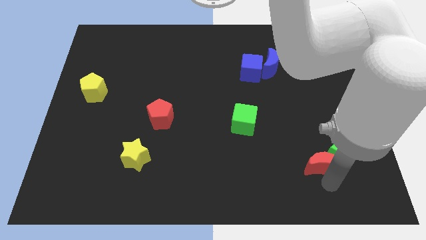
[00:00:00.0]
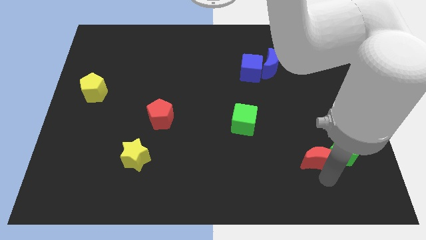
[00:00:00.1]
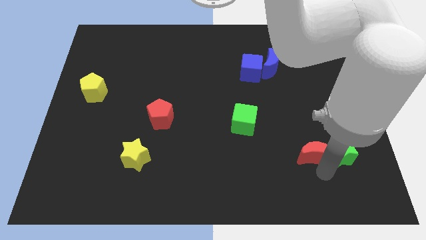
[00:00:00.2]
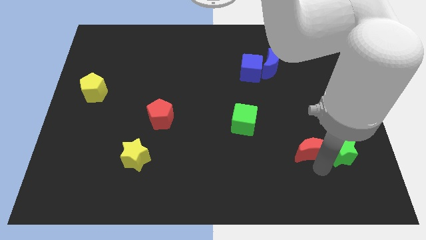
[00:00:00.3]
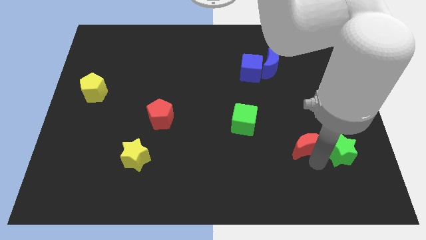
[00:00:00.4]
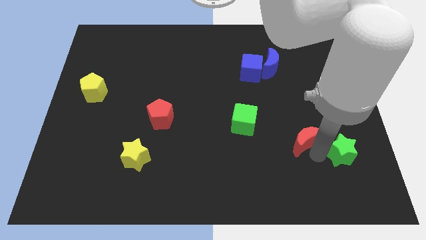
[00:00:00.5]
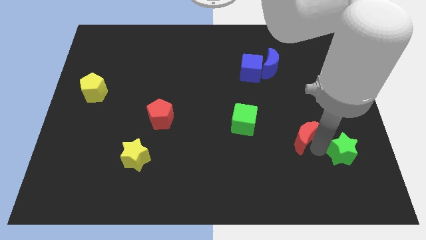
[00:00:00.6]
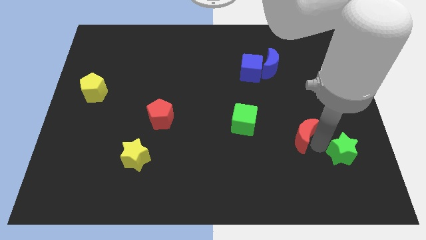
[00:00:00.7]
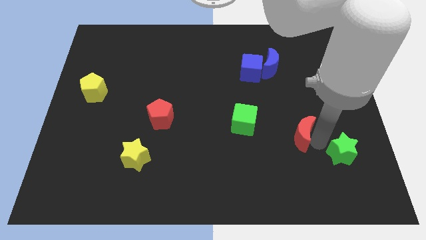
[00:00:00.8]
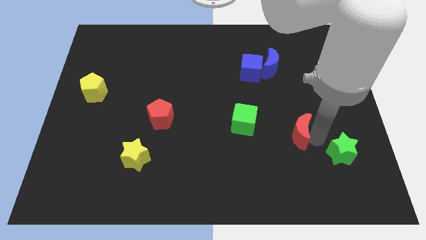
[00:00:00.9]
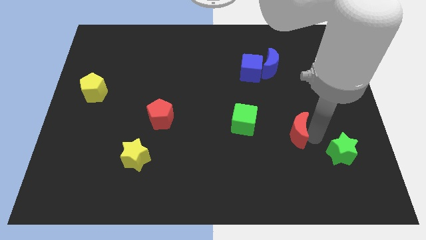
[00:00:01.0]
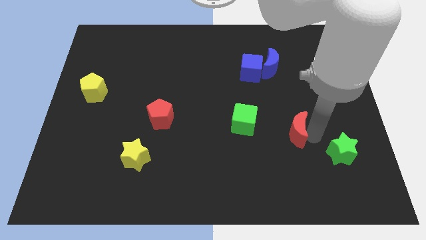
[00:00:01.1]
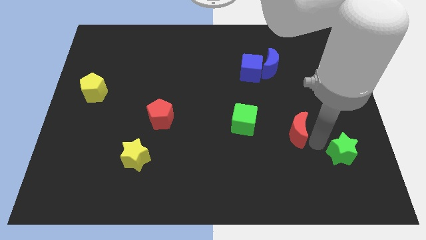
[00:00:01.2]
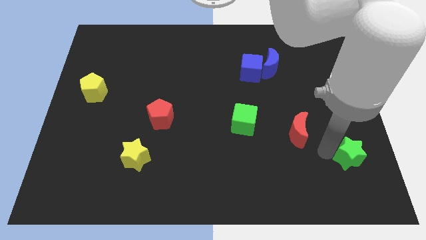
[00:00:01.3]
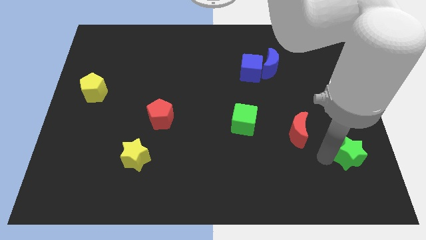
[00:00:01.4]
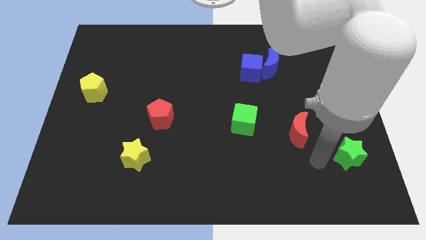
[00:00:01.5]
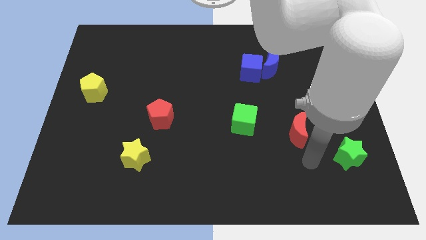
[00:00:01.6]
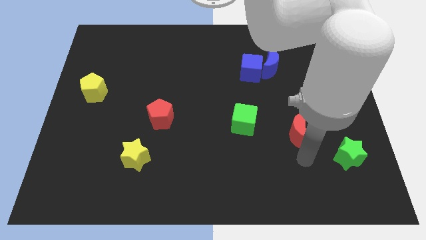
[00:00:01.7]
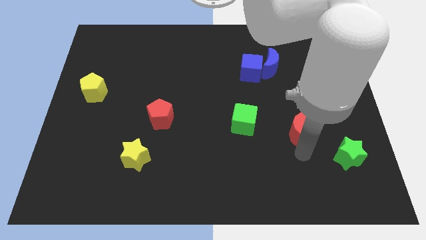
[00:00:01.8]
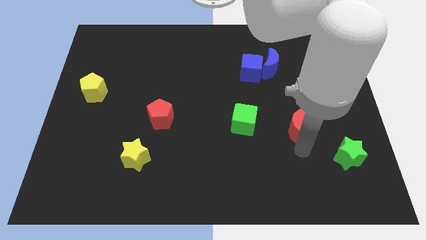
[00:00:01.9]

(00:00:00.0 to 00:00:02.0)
move the red moon slightly to the top side of the board

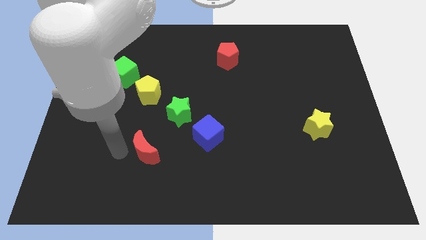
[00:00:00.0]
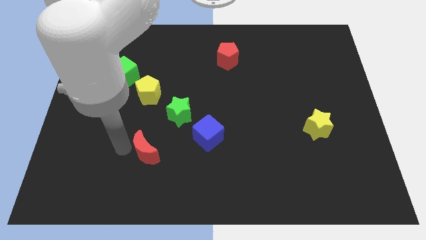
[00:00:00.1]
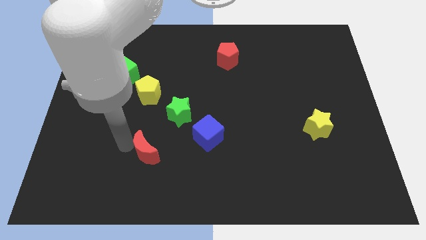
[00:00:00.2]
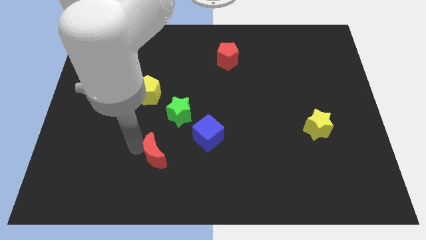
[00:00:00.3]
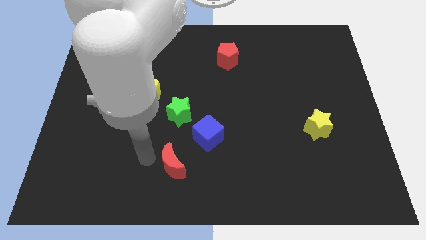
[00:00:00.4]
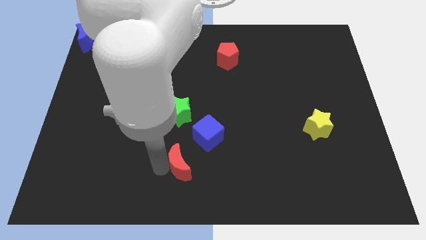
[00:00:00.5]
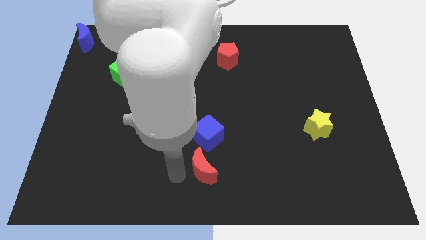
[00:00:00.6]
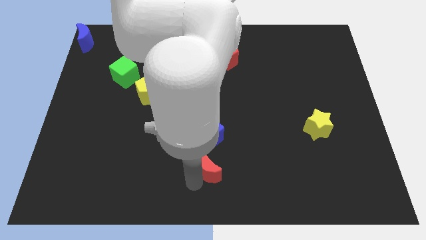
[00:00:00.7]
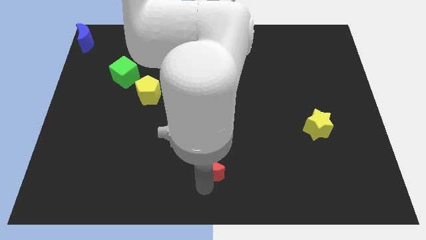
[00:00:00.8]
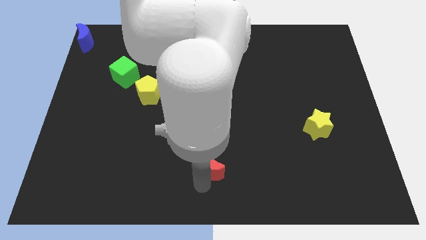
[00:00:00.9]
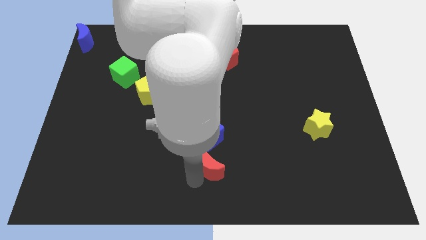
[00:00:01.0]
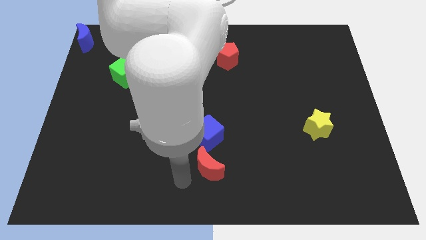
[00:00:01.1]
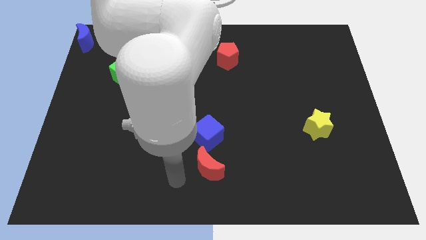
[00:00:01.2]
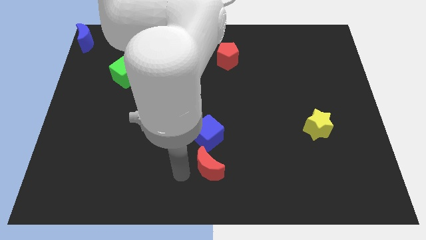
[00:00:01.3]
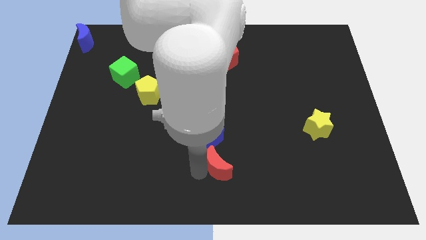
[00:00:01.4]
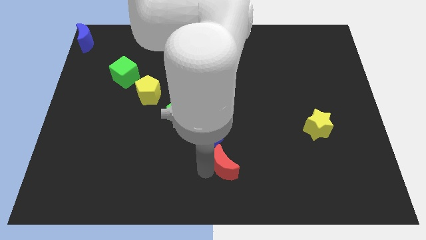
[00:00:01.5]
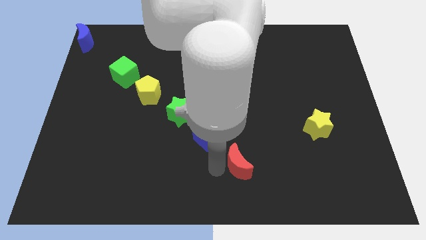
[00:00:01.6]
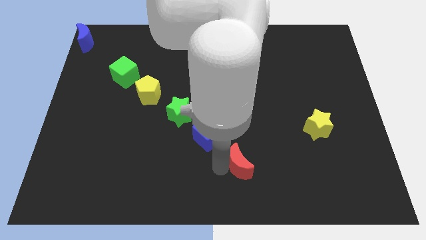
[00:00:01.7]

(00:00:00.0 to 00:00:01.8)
place the red moon to bottom of the blue cube

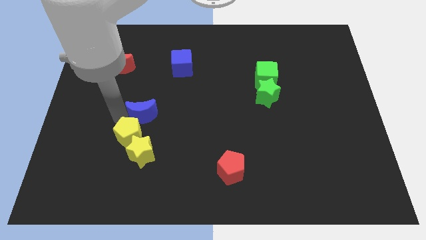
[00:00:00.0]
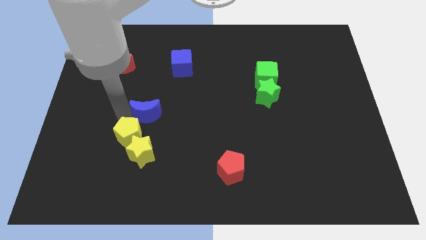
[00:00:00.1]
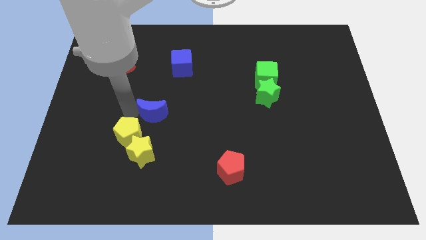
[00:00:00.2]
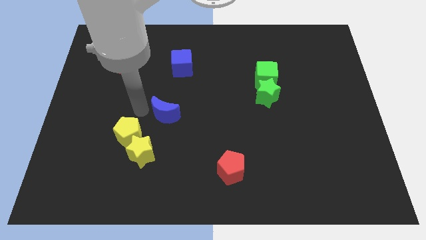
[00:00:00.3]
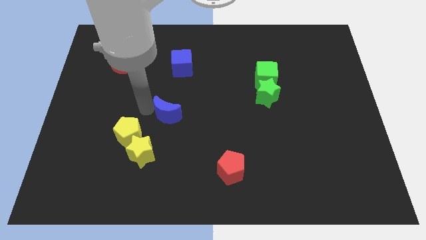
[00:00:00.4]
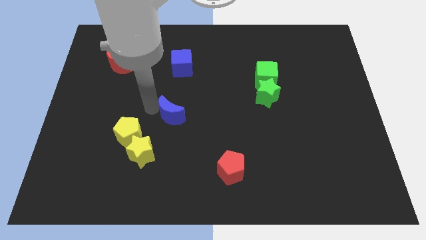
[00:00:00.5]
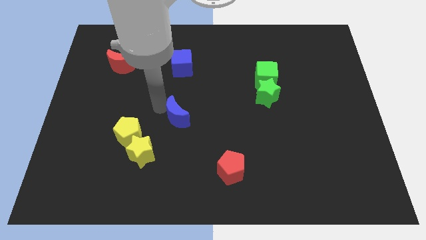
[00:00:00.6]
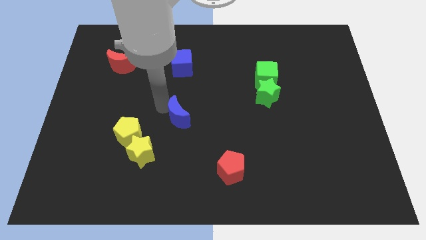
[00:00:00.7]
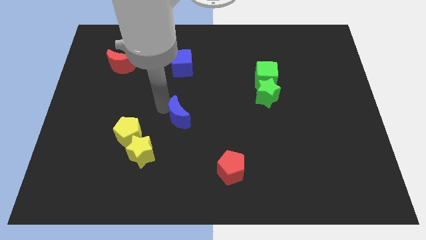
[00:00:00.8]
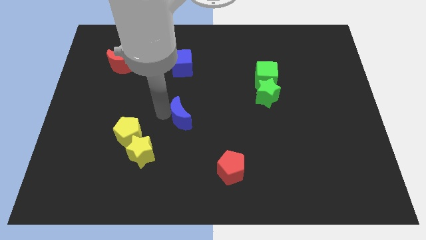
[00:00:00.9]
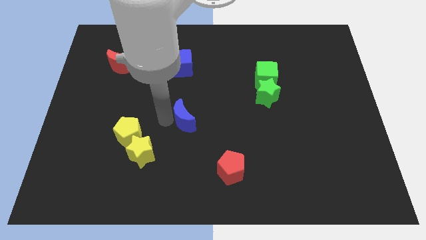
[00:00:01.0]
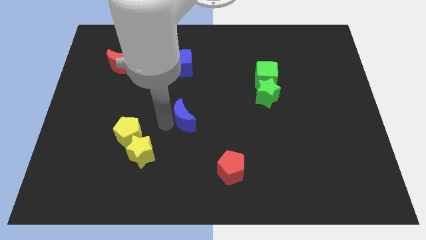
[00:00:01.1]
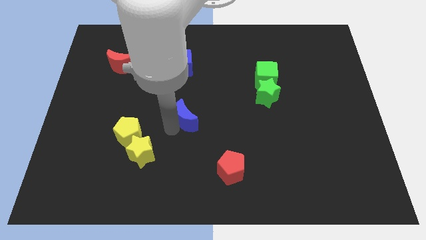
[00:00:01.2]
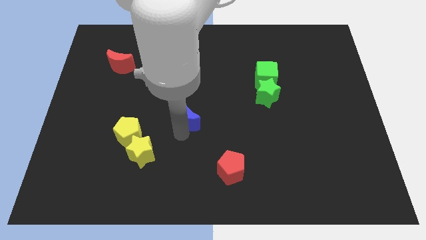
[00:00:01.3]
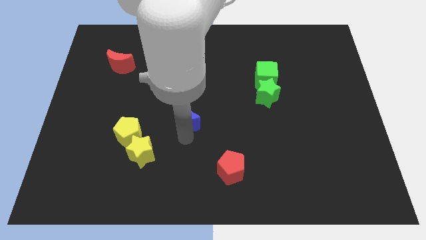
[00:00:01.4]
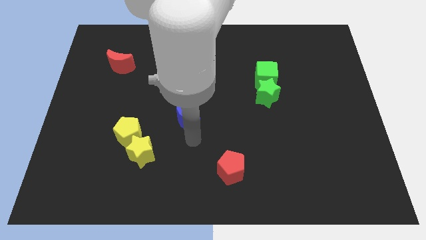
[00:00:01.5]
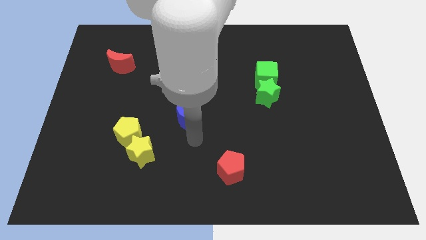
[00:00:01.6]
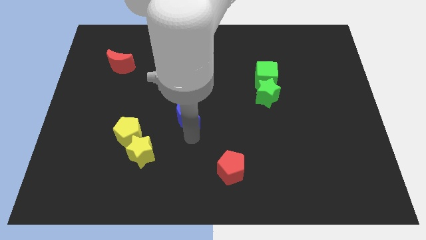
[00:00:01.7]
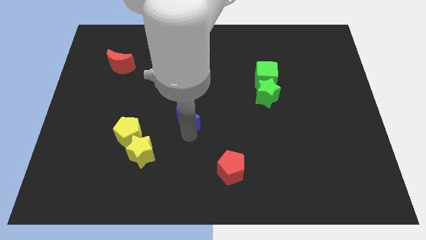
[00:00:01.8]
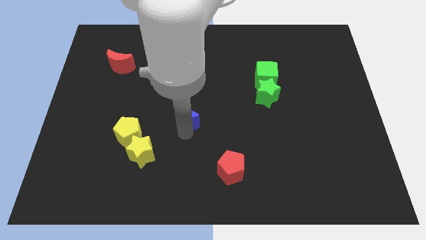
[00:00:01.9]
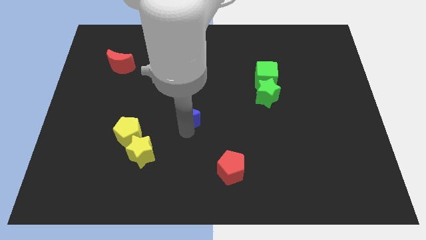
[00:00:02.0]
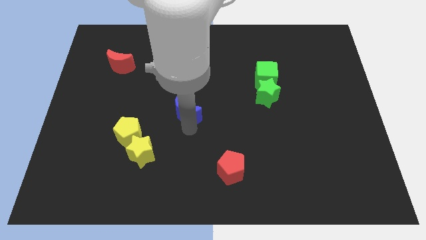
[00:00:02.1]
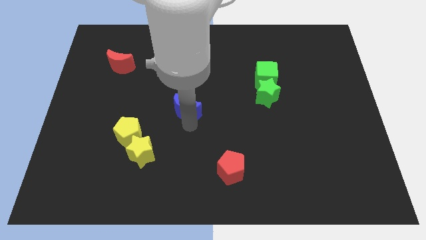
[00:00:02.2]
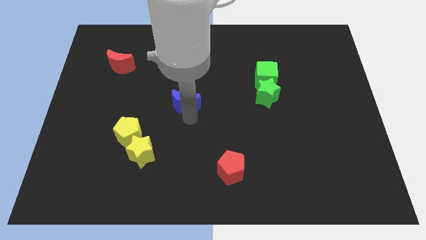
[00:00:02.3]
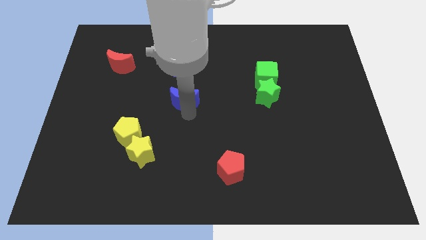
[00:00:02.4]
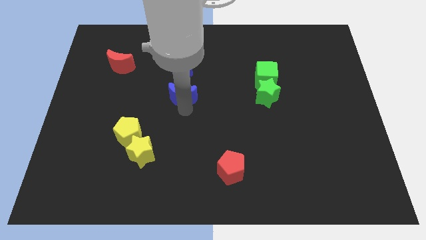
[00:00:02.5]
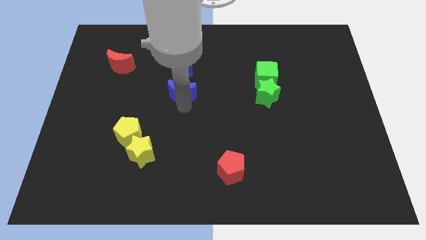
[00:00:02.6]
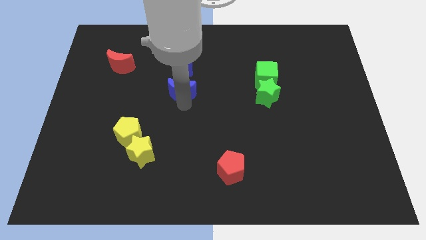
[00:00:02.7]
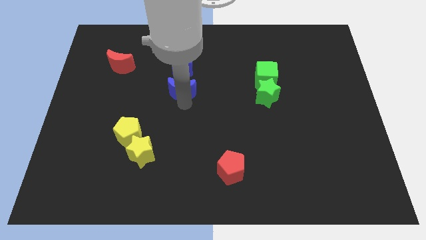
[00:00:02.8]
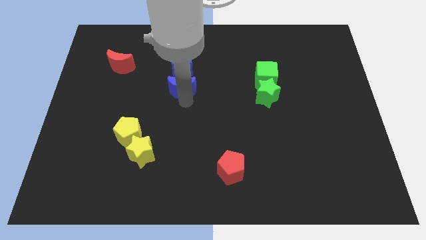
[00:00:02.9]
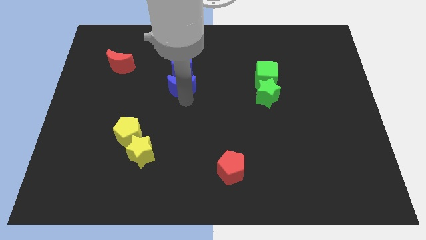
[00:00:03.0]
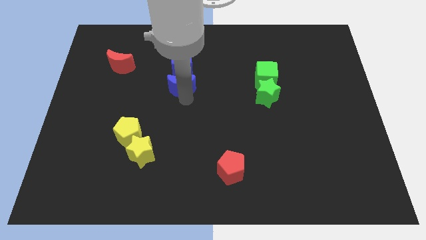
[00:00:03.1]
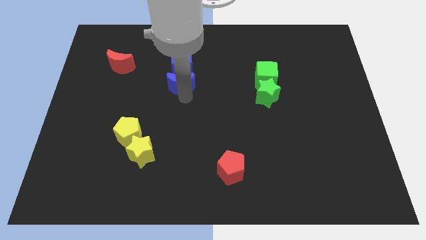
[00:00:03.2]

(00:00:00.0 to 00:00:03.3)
place the blue moon at the bottom of blue cube

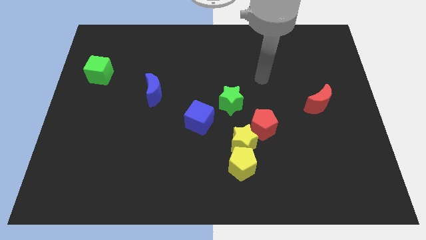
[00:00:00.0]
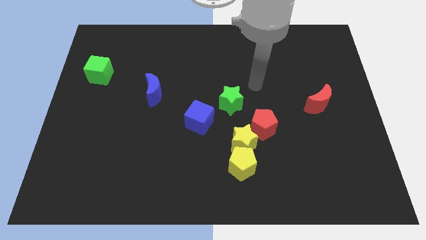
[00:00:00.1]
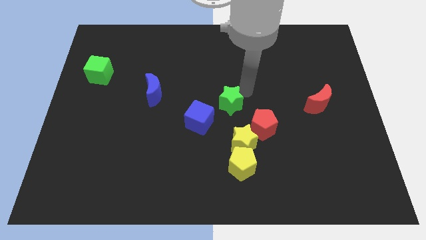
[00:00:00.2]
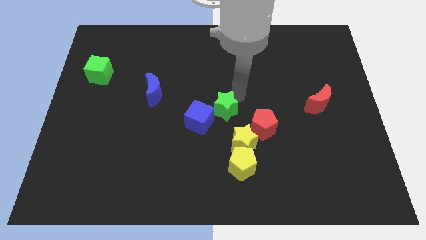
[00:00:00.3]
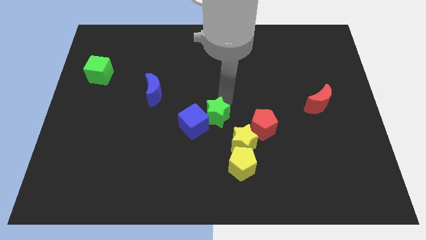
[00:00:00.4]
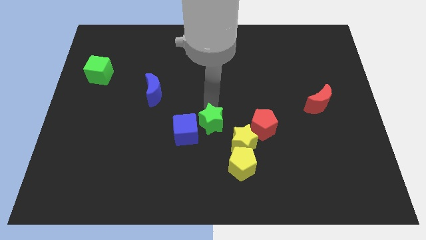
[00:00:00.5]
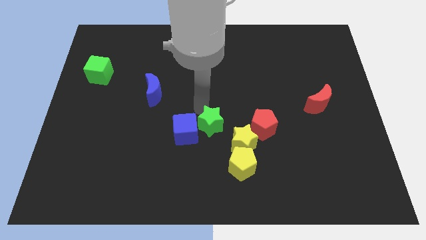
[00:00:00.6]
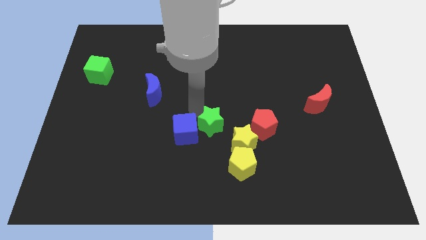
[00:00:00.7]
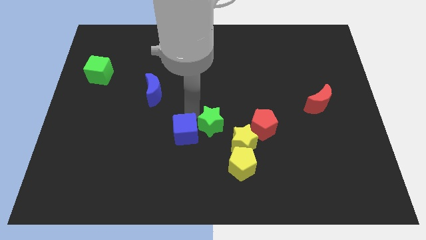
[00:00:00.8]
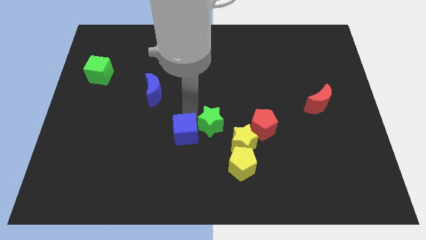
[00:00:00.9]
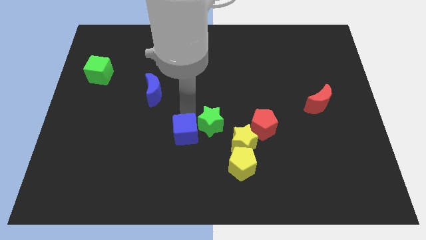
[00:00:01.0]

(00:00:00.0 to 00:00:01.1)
push the green star into the blue cube

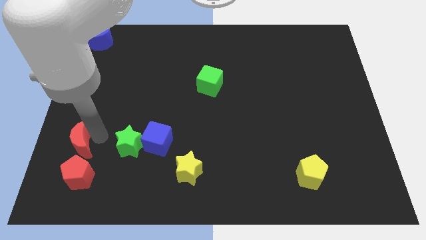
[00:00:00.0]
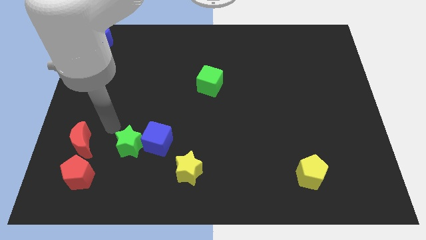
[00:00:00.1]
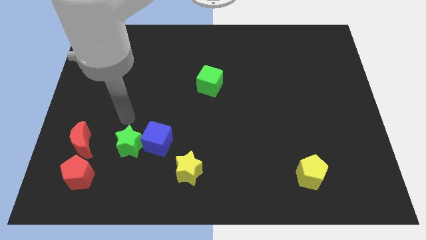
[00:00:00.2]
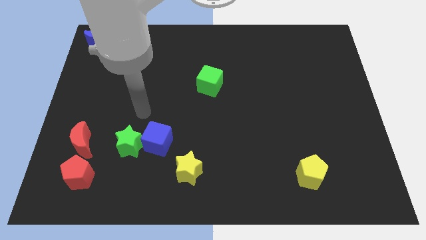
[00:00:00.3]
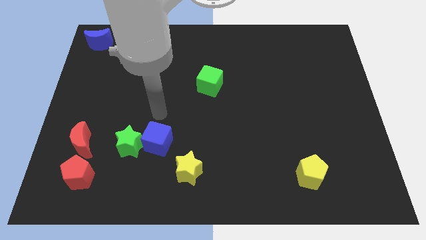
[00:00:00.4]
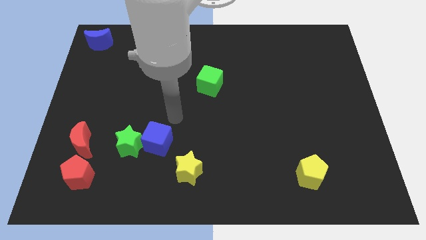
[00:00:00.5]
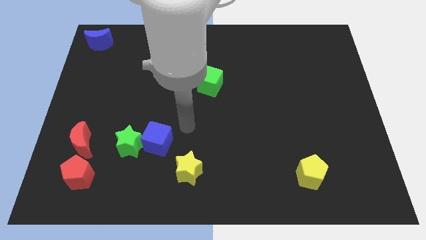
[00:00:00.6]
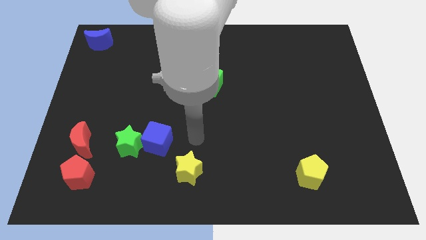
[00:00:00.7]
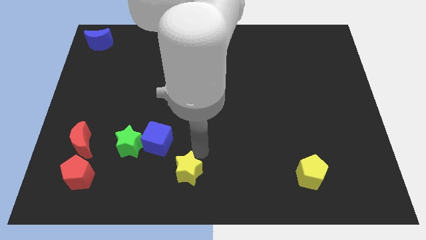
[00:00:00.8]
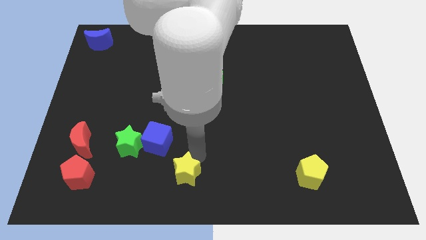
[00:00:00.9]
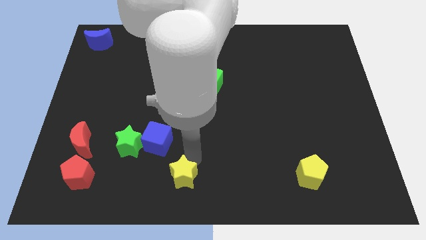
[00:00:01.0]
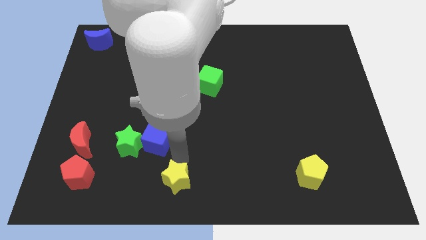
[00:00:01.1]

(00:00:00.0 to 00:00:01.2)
push yellow star to the bottom right of blue cube
